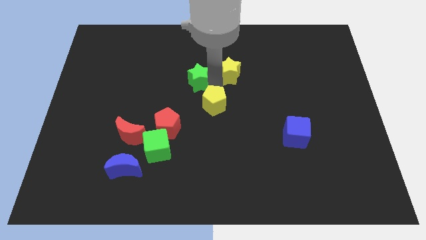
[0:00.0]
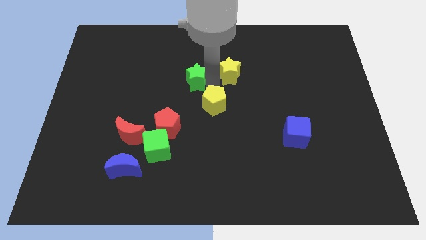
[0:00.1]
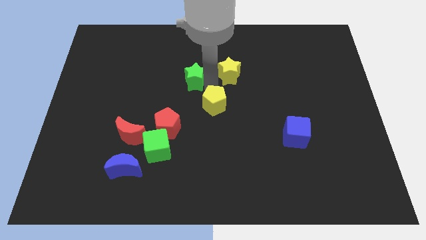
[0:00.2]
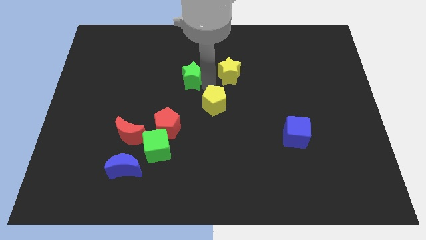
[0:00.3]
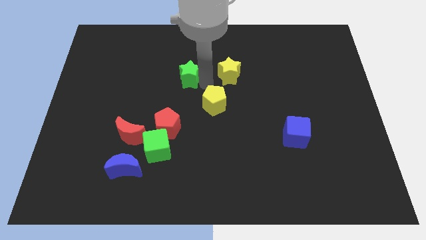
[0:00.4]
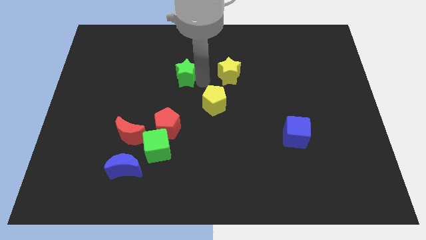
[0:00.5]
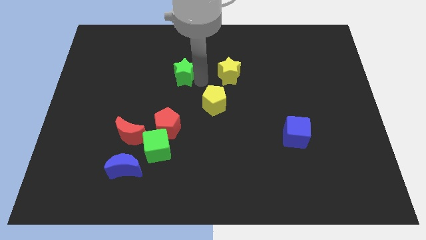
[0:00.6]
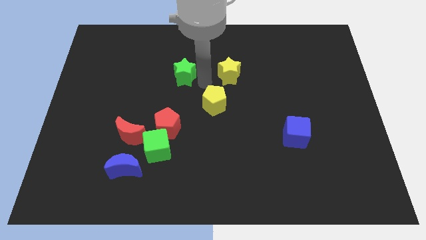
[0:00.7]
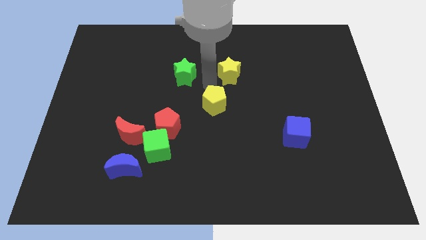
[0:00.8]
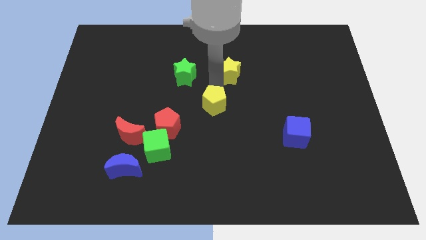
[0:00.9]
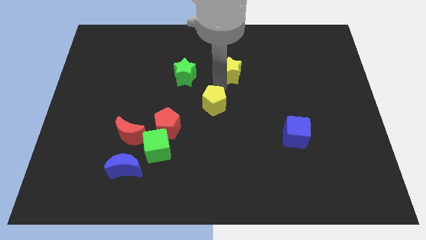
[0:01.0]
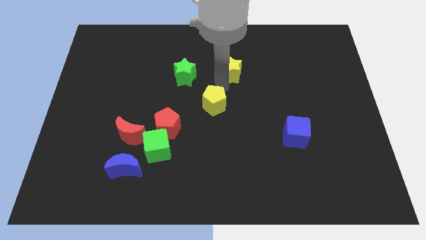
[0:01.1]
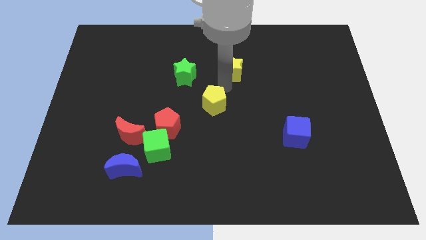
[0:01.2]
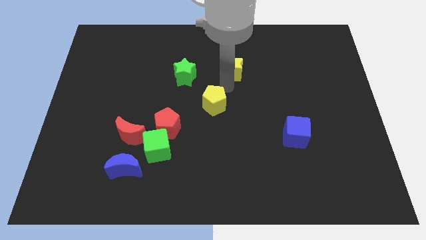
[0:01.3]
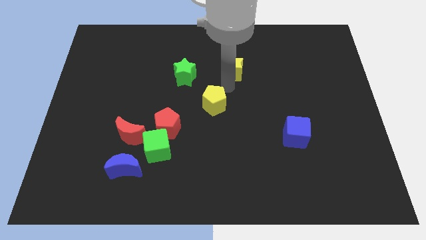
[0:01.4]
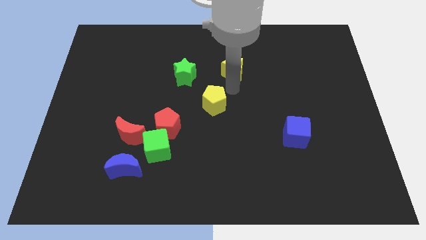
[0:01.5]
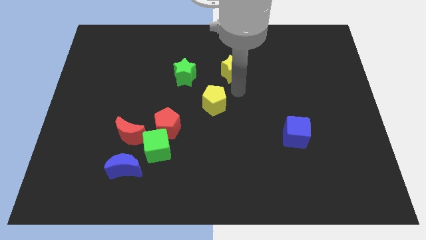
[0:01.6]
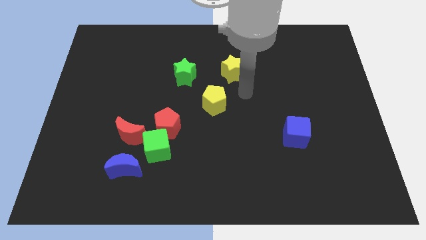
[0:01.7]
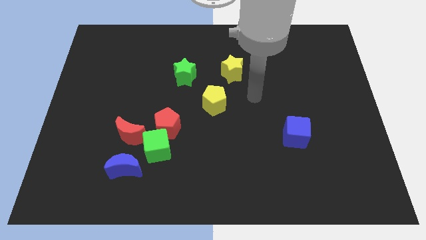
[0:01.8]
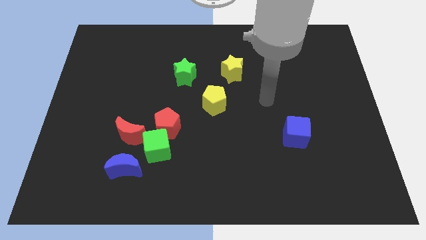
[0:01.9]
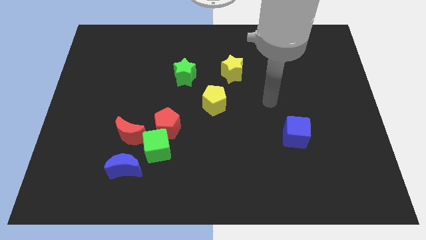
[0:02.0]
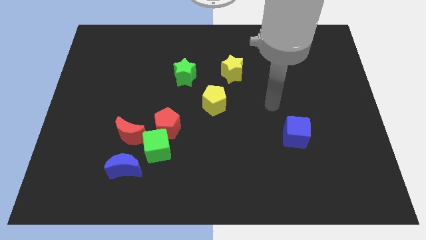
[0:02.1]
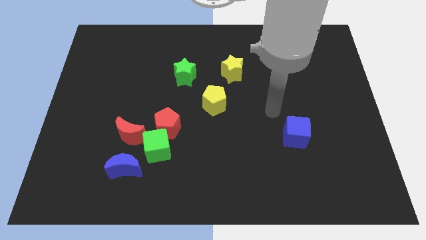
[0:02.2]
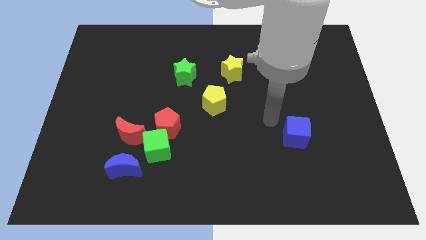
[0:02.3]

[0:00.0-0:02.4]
make a triangle with the help of yellow star green star and yellow pentagon

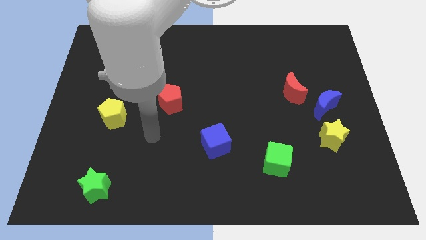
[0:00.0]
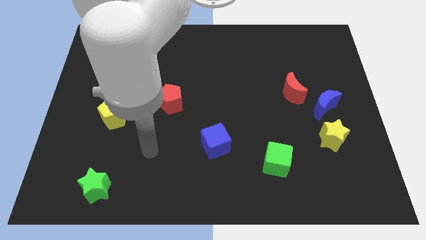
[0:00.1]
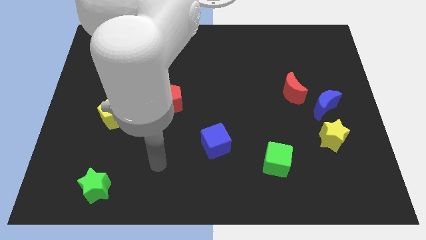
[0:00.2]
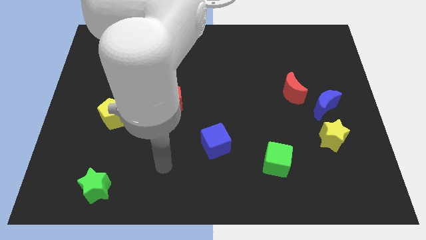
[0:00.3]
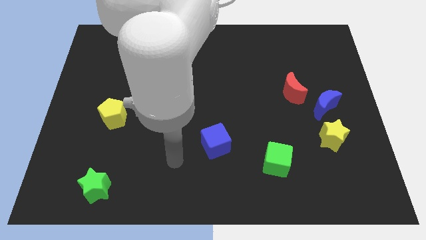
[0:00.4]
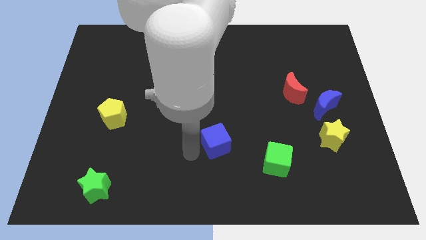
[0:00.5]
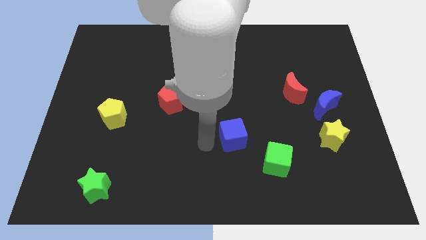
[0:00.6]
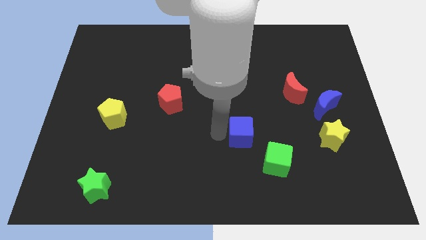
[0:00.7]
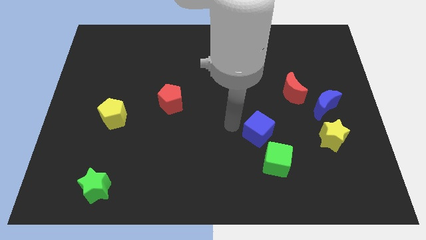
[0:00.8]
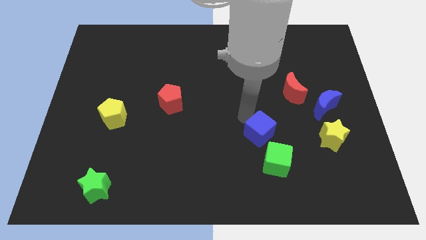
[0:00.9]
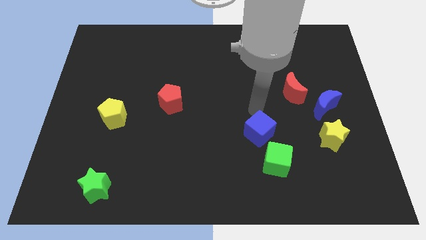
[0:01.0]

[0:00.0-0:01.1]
push the blue cube top left of the green cube

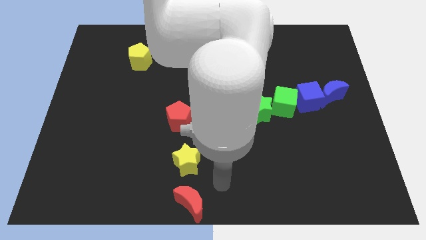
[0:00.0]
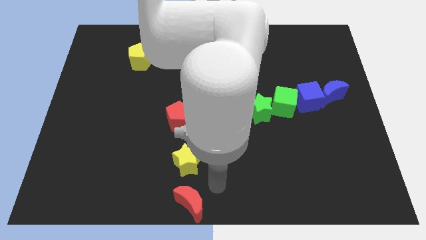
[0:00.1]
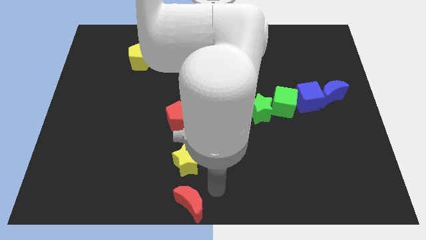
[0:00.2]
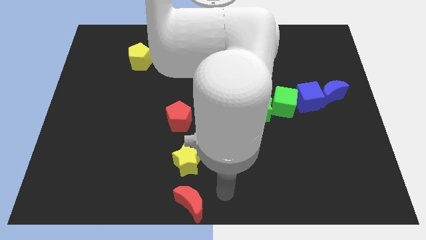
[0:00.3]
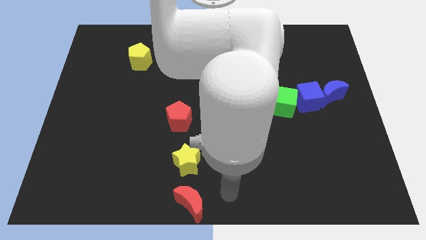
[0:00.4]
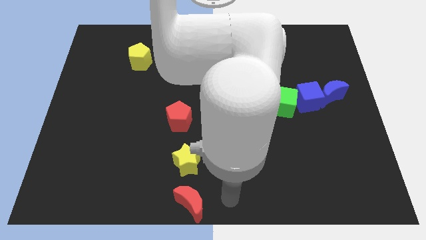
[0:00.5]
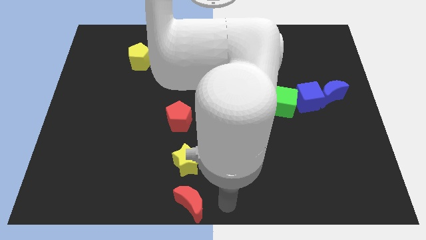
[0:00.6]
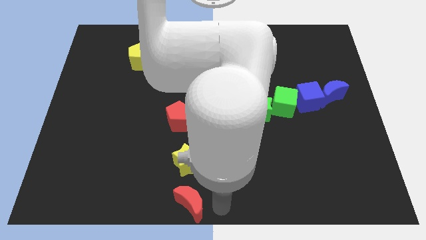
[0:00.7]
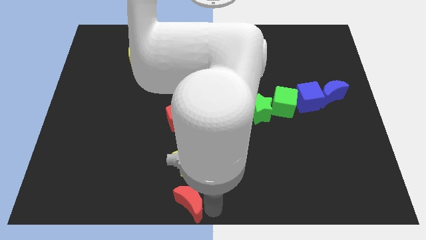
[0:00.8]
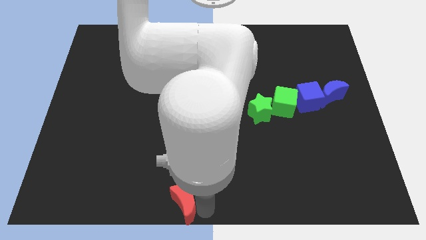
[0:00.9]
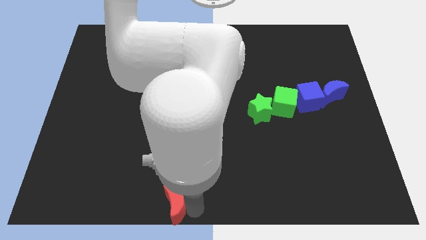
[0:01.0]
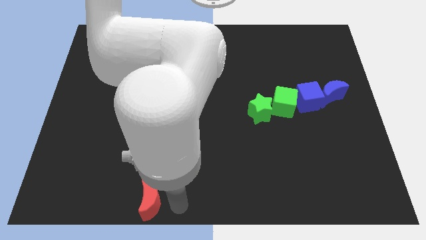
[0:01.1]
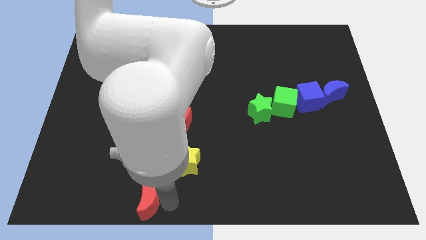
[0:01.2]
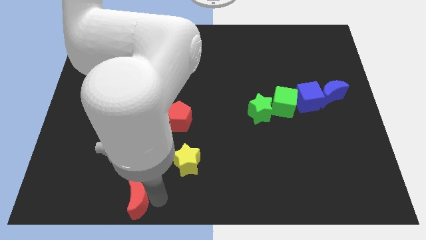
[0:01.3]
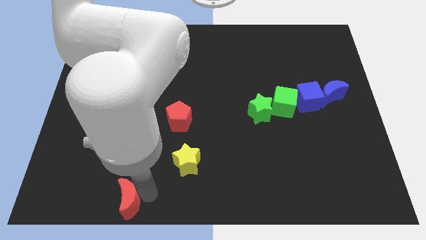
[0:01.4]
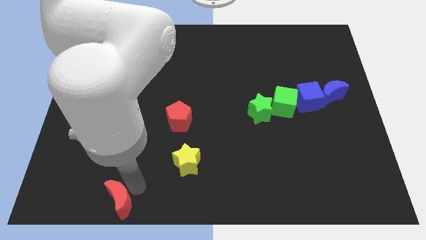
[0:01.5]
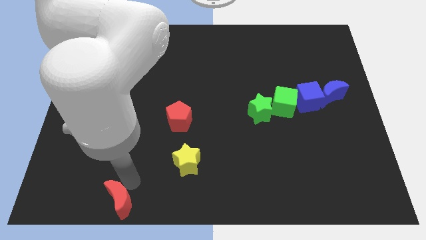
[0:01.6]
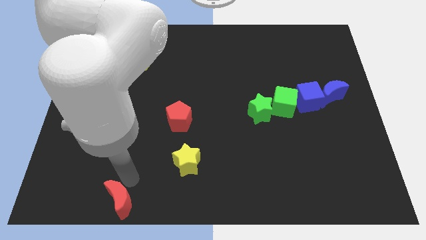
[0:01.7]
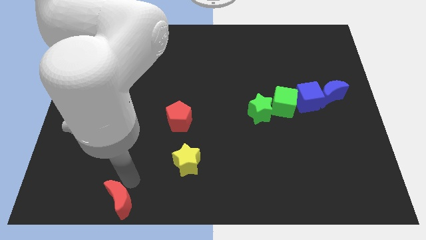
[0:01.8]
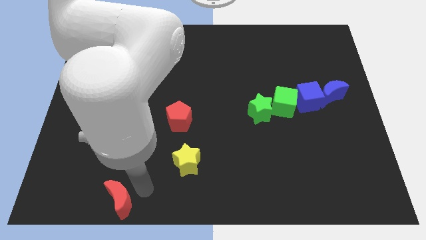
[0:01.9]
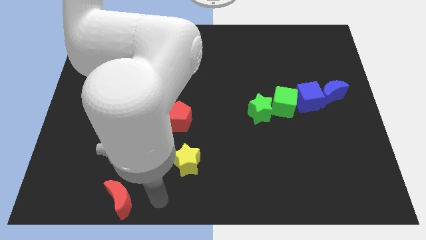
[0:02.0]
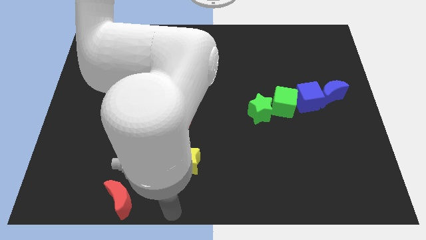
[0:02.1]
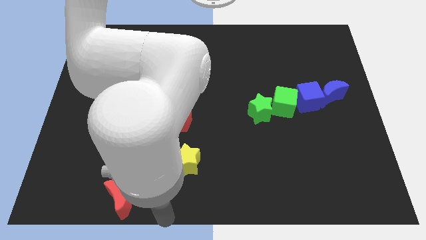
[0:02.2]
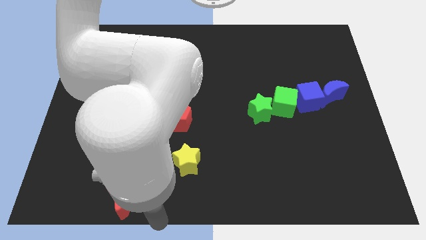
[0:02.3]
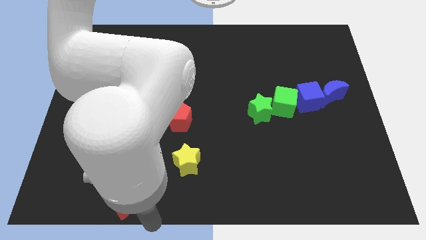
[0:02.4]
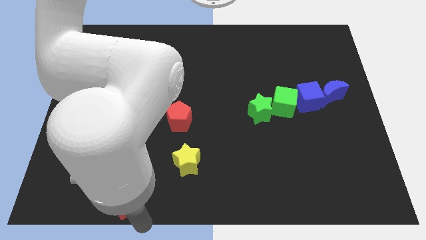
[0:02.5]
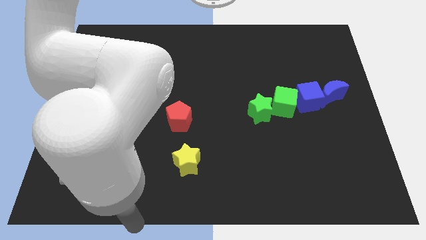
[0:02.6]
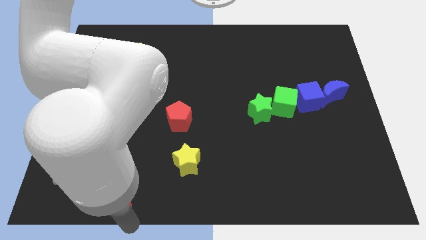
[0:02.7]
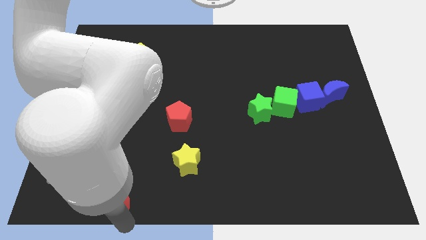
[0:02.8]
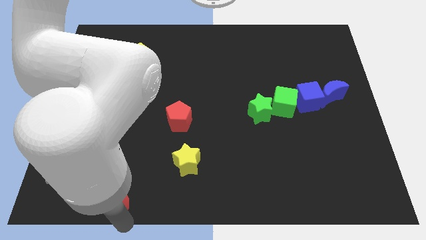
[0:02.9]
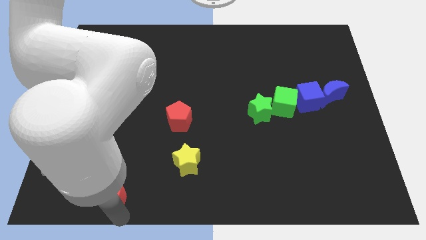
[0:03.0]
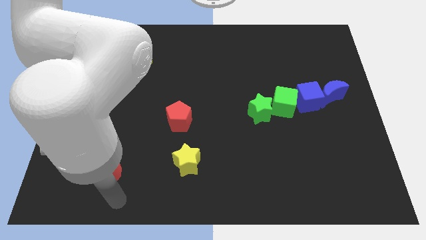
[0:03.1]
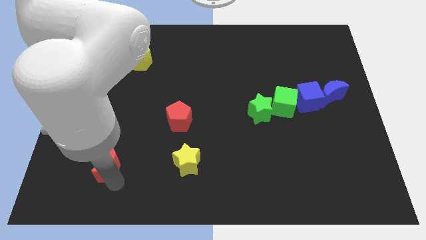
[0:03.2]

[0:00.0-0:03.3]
place the red crescent to the left of the yellow star

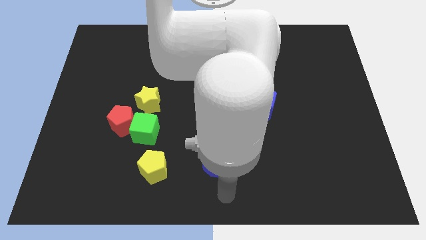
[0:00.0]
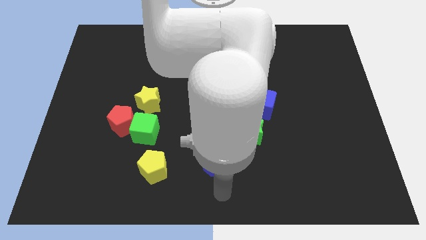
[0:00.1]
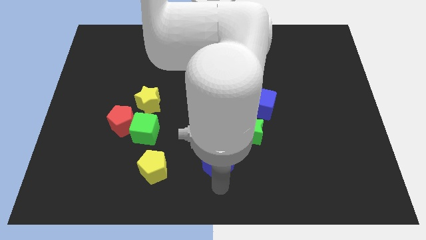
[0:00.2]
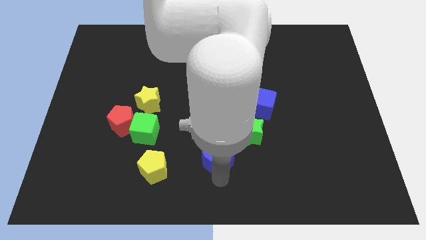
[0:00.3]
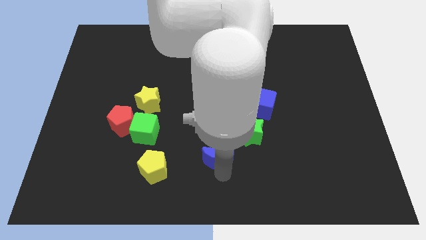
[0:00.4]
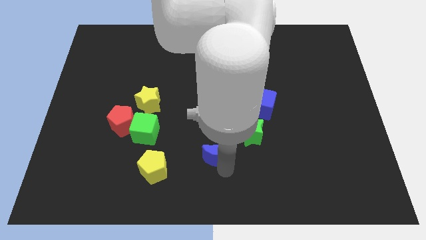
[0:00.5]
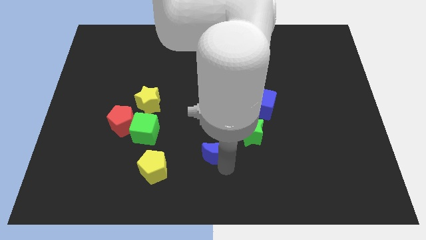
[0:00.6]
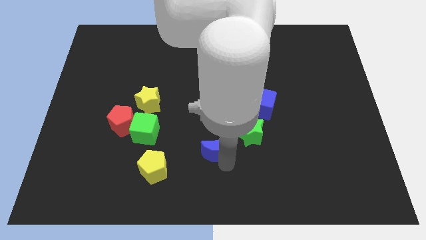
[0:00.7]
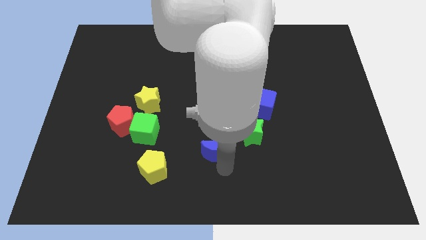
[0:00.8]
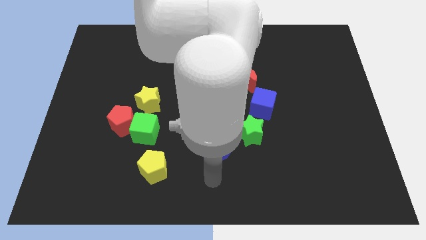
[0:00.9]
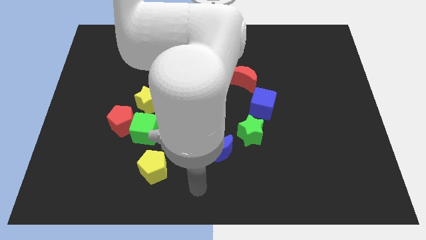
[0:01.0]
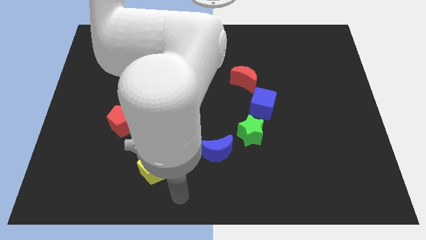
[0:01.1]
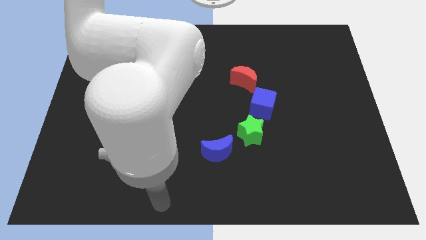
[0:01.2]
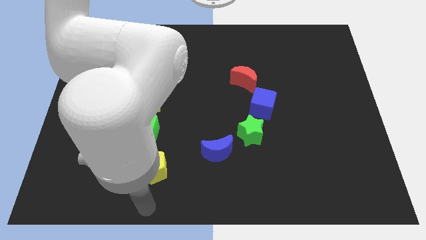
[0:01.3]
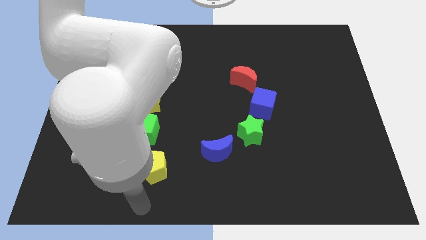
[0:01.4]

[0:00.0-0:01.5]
place blue moon to the bottom left of green star

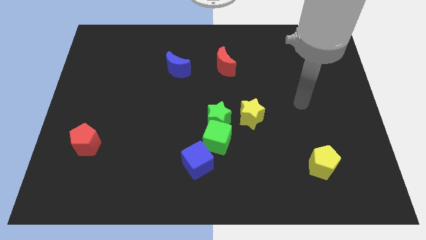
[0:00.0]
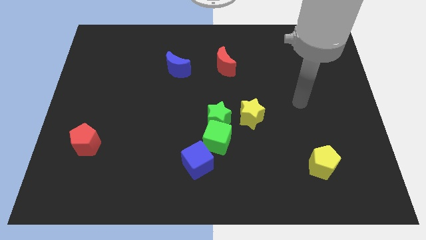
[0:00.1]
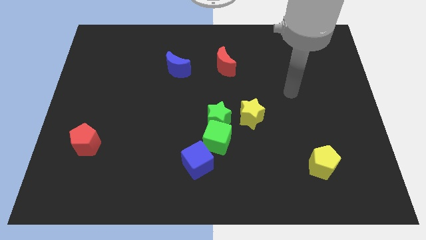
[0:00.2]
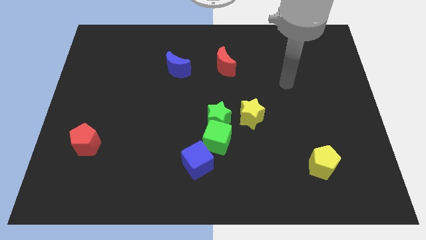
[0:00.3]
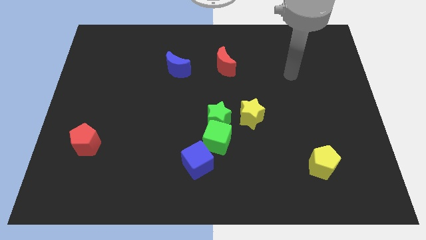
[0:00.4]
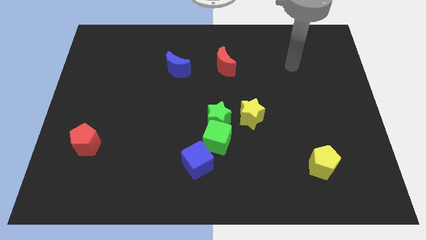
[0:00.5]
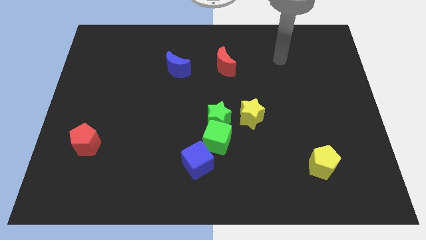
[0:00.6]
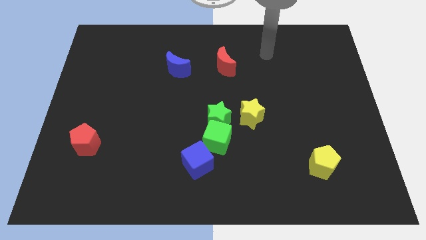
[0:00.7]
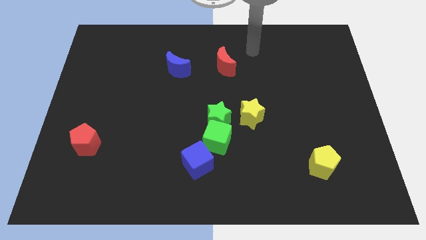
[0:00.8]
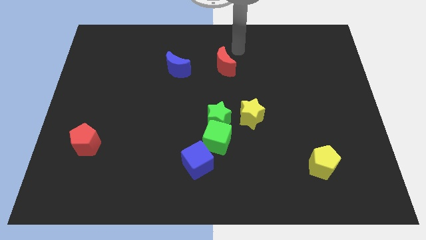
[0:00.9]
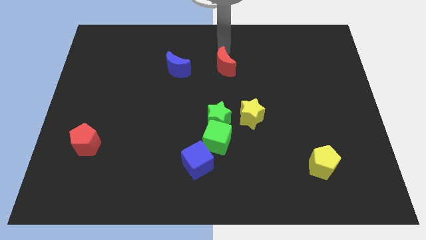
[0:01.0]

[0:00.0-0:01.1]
move your arm at the top side of the red crescent
